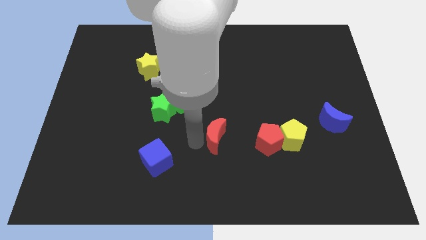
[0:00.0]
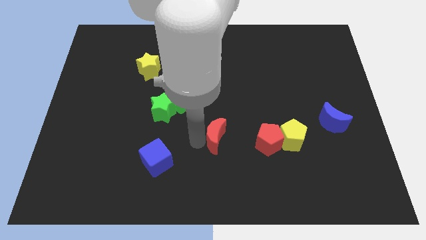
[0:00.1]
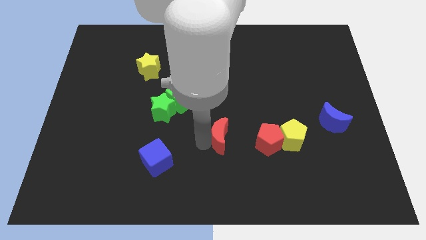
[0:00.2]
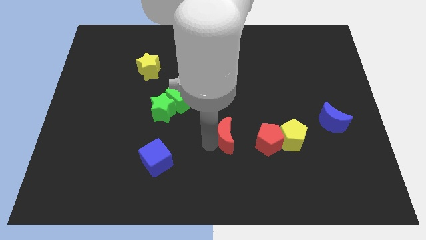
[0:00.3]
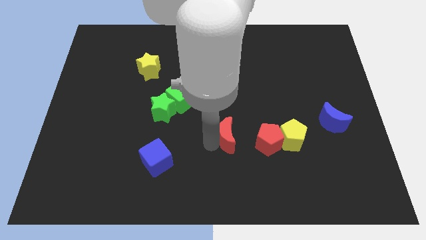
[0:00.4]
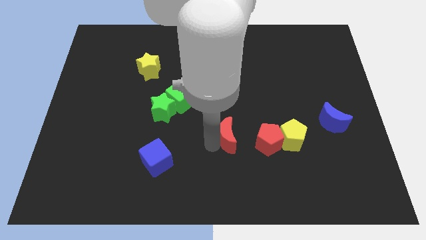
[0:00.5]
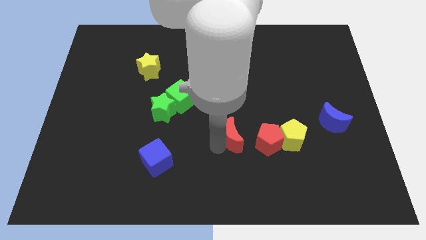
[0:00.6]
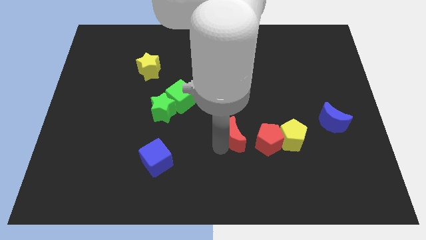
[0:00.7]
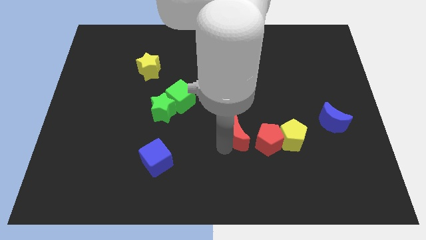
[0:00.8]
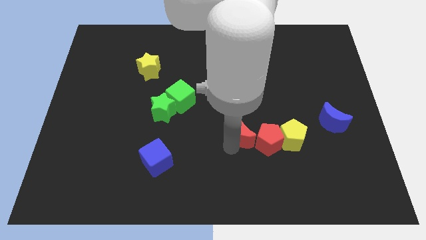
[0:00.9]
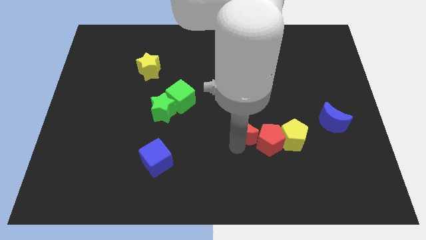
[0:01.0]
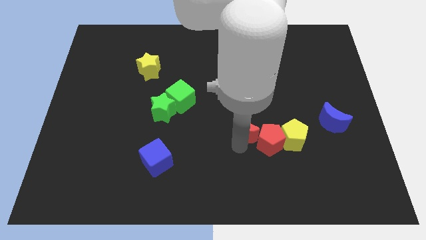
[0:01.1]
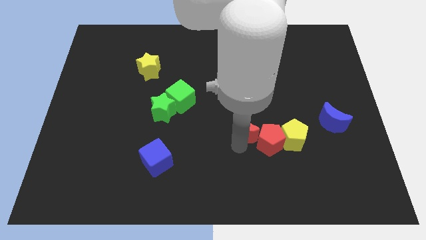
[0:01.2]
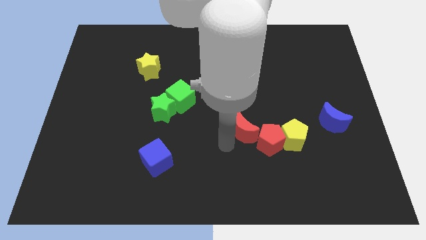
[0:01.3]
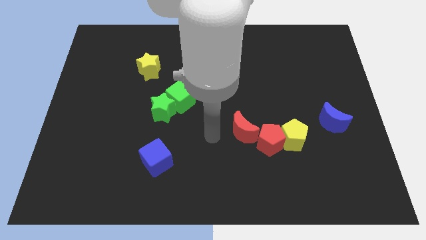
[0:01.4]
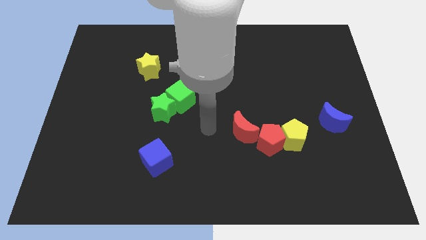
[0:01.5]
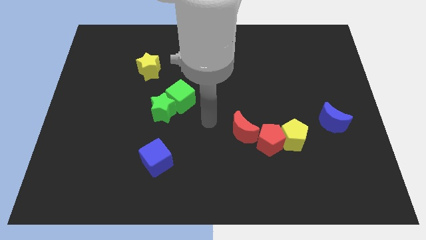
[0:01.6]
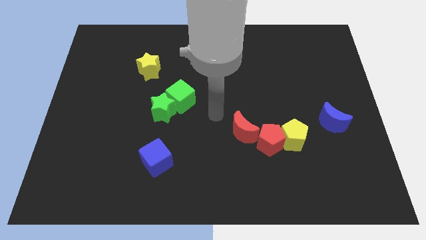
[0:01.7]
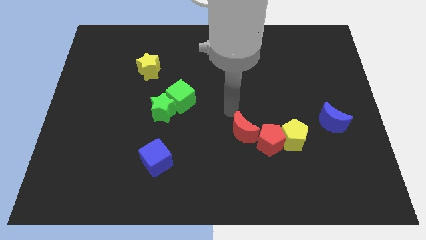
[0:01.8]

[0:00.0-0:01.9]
push the red moon into the red pentagon

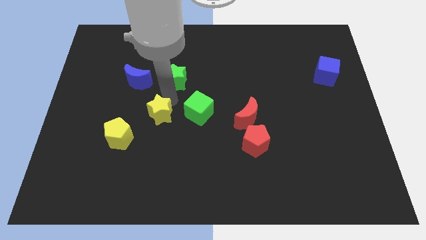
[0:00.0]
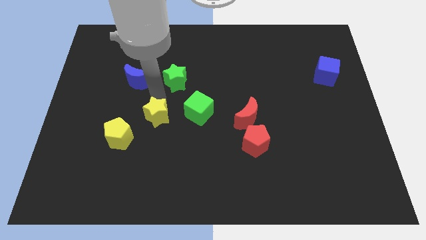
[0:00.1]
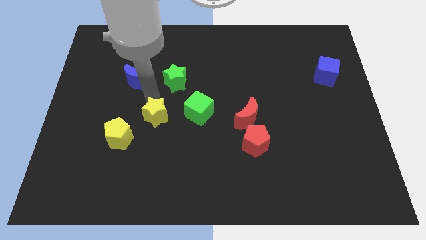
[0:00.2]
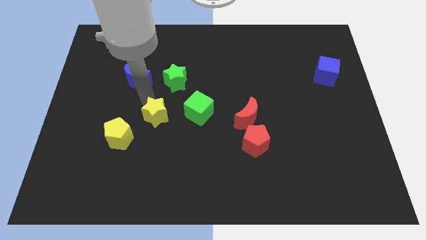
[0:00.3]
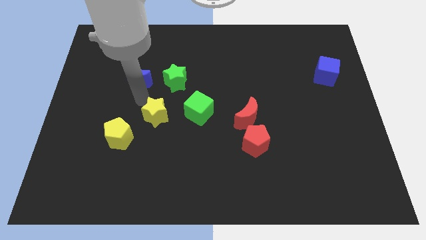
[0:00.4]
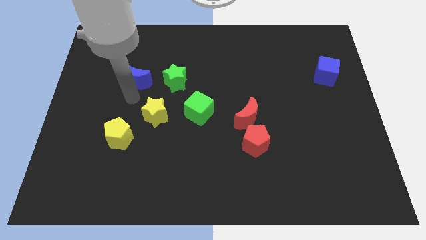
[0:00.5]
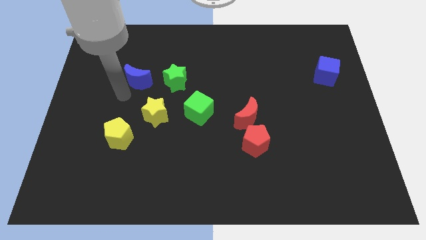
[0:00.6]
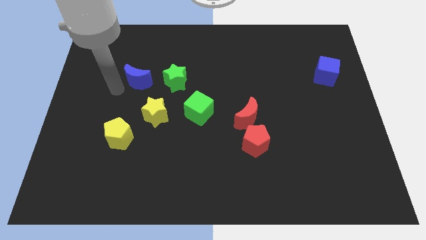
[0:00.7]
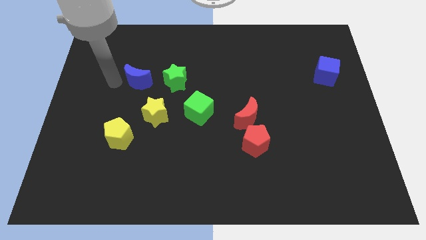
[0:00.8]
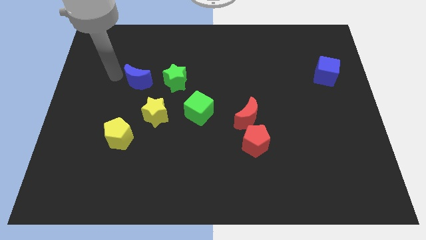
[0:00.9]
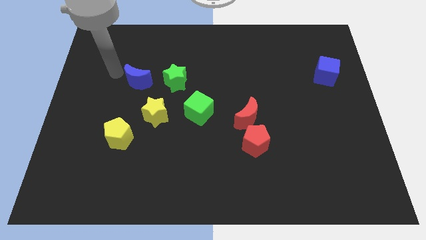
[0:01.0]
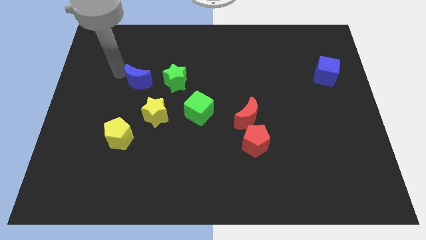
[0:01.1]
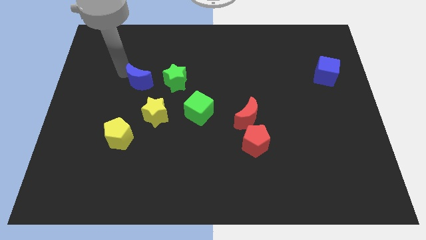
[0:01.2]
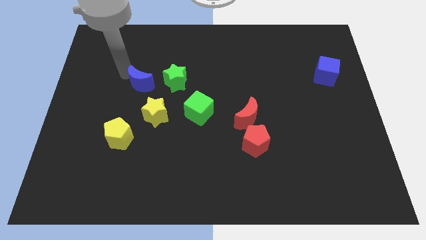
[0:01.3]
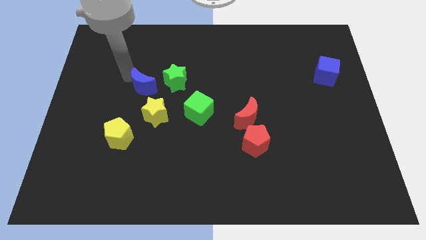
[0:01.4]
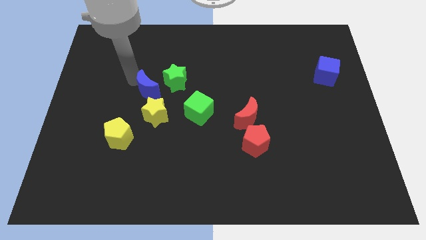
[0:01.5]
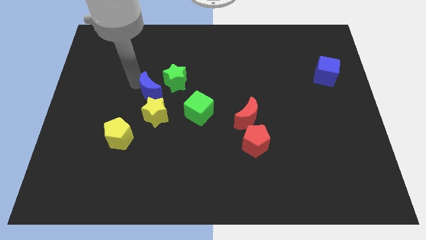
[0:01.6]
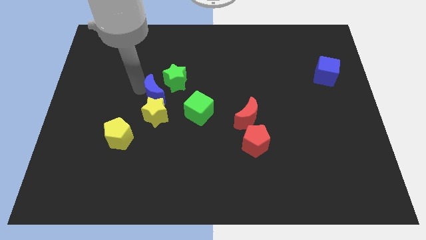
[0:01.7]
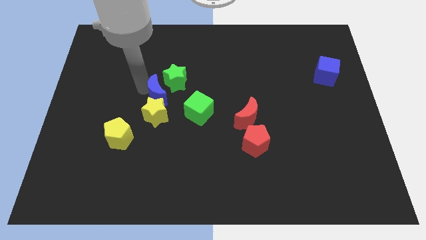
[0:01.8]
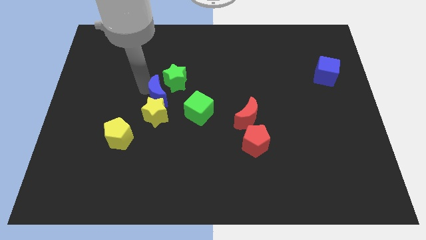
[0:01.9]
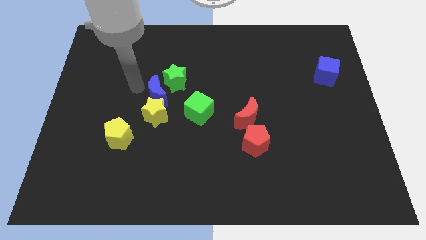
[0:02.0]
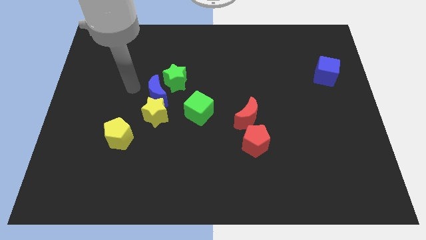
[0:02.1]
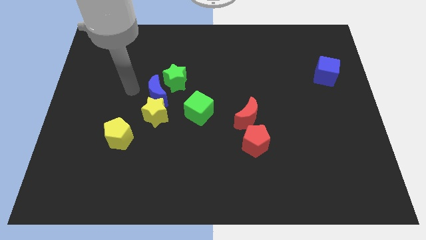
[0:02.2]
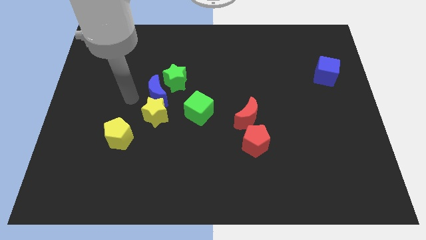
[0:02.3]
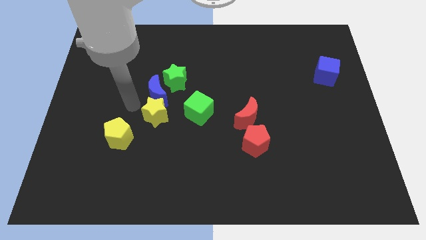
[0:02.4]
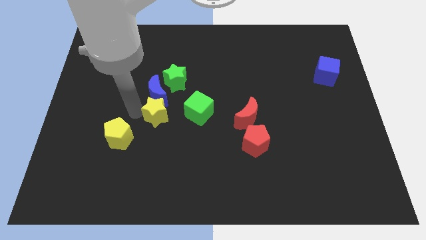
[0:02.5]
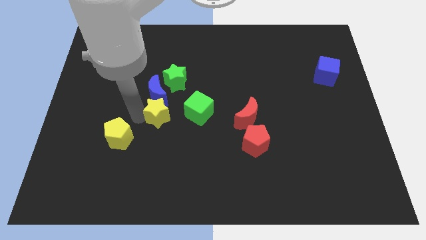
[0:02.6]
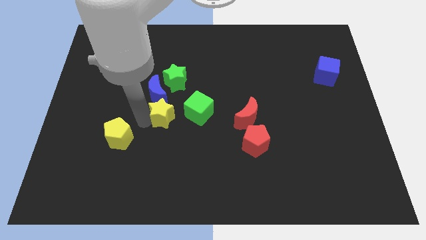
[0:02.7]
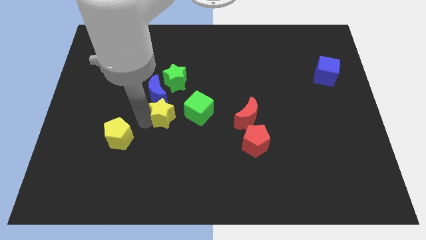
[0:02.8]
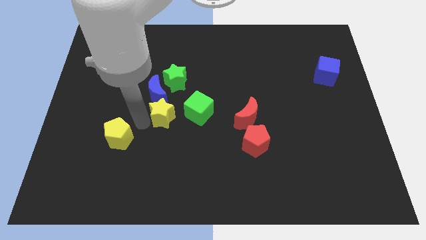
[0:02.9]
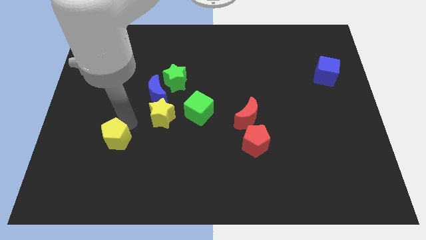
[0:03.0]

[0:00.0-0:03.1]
place the blue crescent above the yellow star

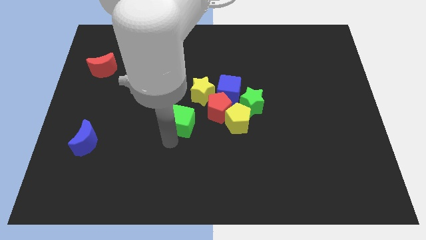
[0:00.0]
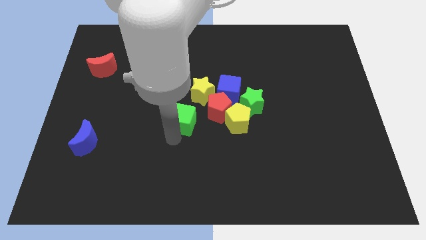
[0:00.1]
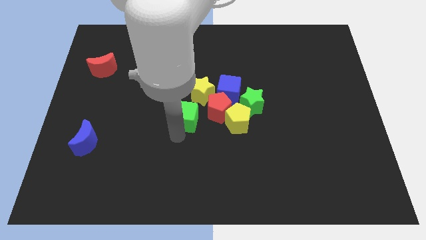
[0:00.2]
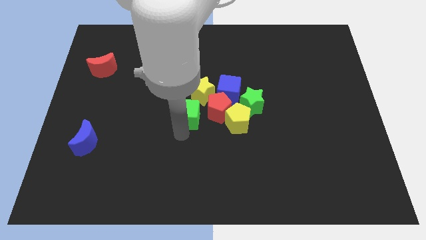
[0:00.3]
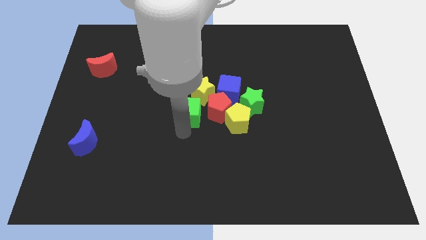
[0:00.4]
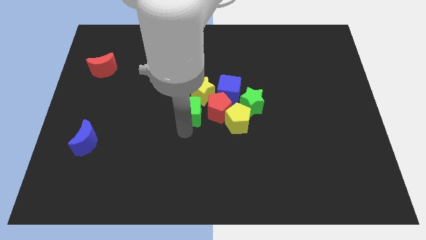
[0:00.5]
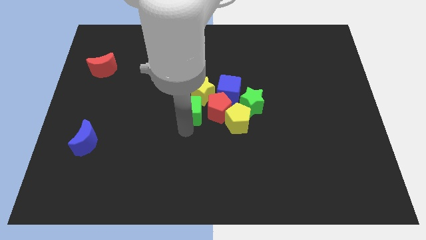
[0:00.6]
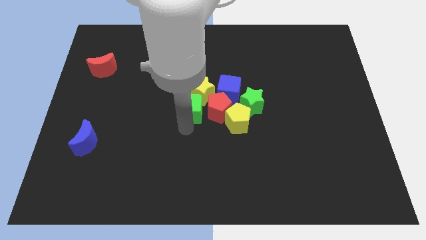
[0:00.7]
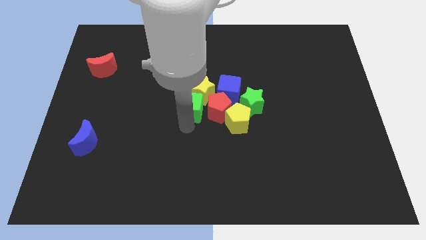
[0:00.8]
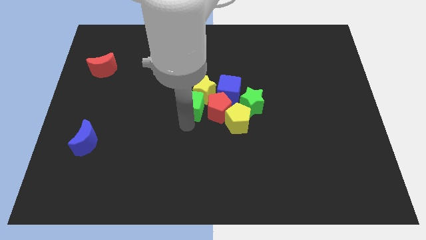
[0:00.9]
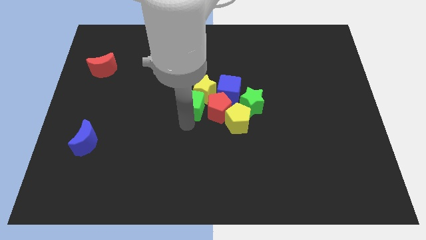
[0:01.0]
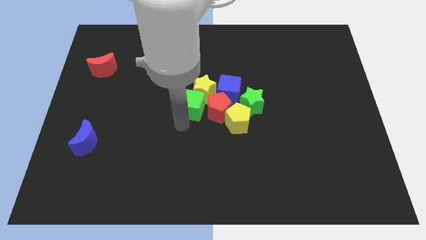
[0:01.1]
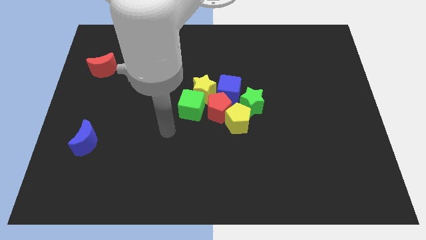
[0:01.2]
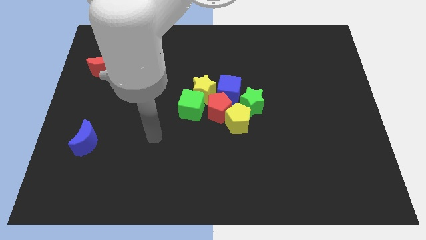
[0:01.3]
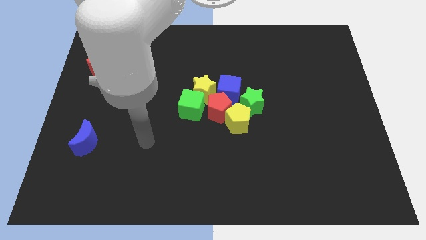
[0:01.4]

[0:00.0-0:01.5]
push the green cube into the yellow star

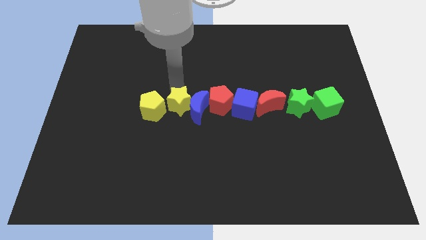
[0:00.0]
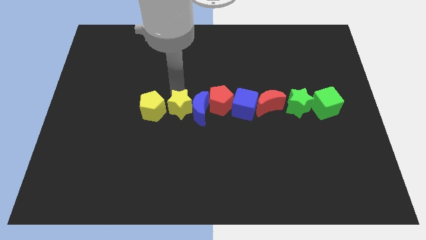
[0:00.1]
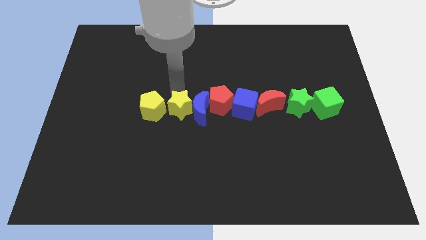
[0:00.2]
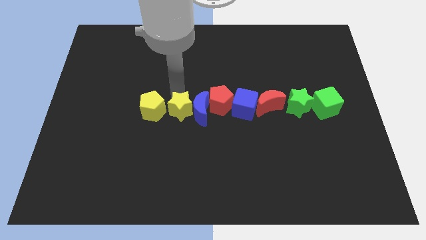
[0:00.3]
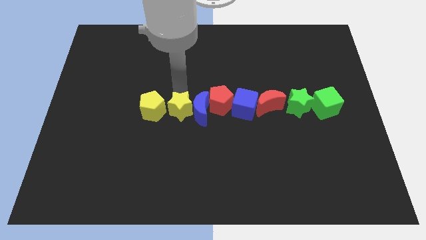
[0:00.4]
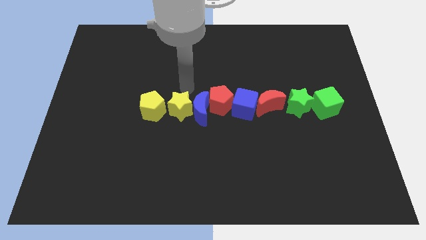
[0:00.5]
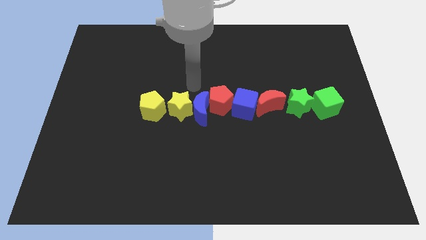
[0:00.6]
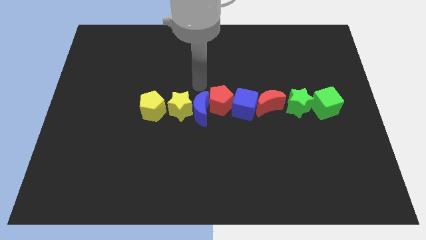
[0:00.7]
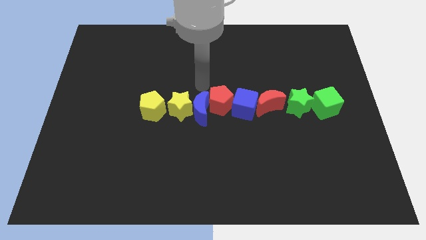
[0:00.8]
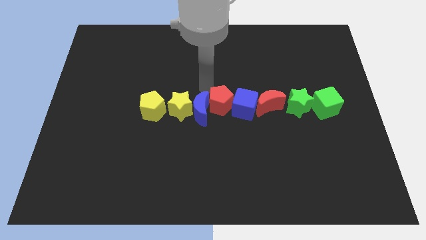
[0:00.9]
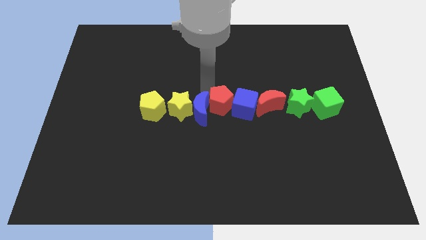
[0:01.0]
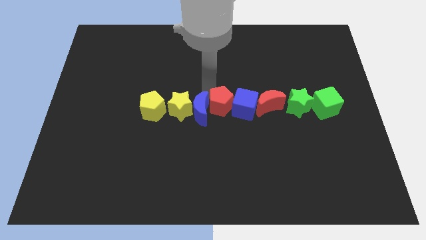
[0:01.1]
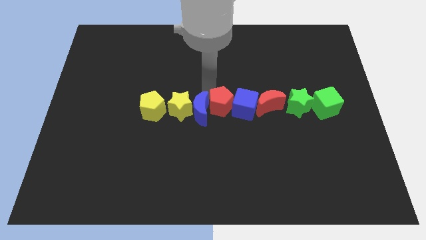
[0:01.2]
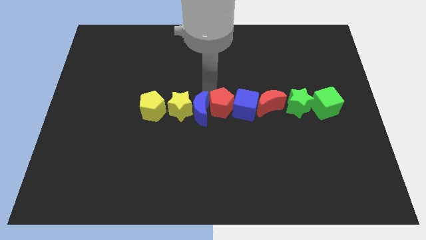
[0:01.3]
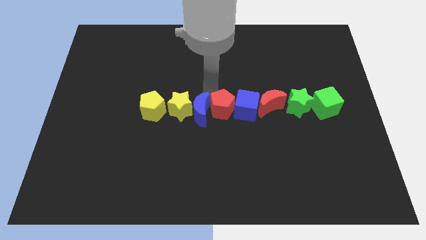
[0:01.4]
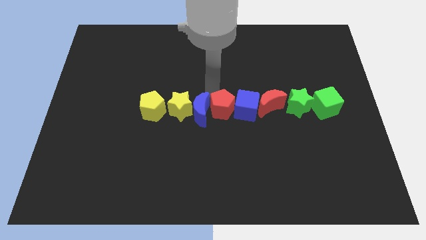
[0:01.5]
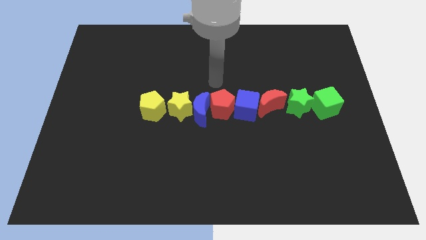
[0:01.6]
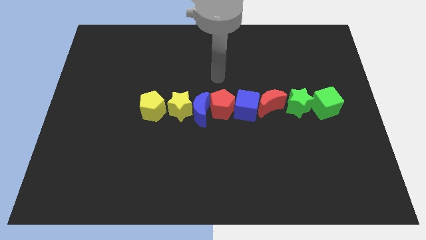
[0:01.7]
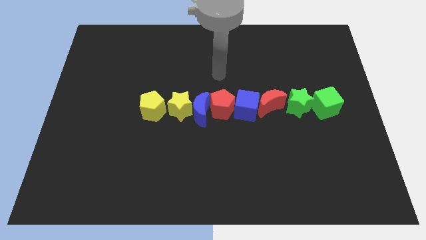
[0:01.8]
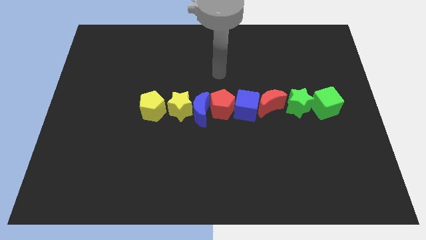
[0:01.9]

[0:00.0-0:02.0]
slightly move the red pentagon down

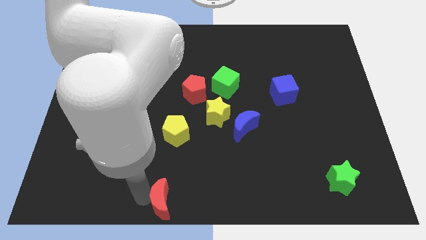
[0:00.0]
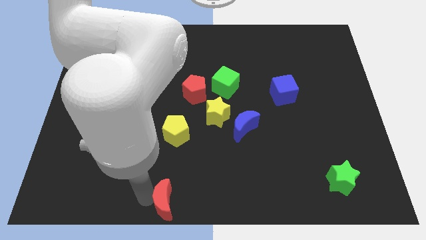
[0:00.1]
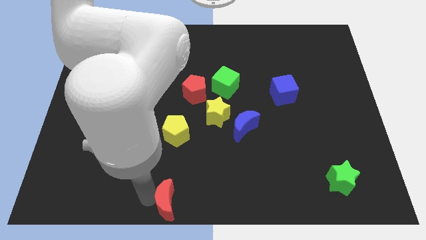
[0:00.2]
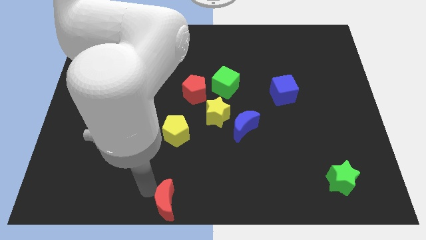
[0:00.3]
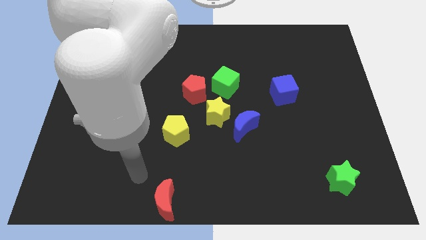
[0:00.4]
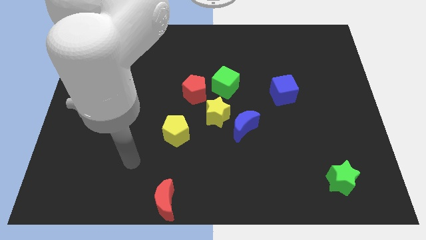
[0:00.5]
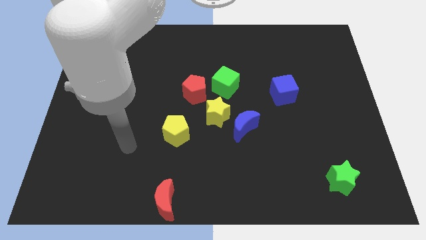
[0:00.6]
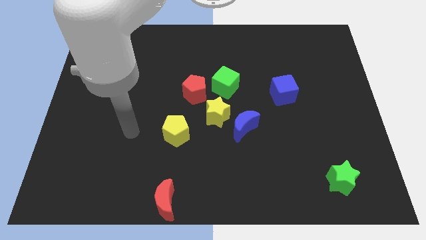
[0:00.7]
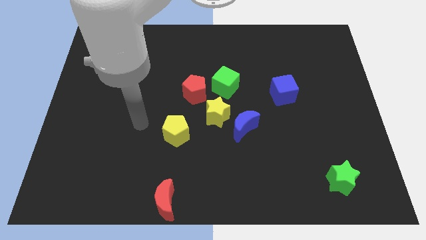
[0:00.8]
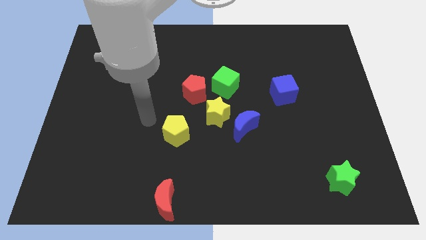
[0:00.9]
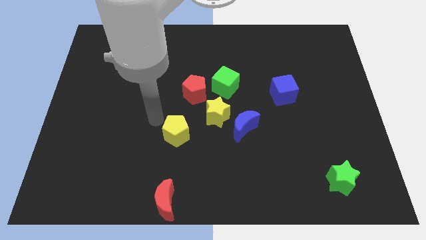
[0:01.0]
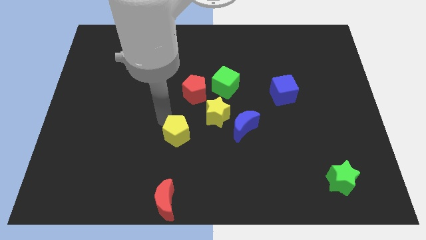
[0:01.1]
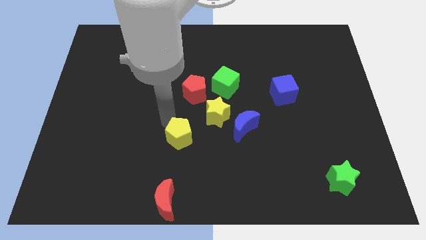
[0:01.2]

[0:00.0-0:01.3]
move arm away from red moon
